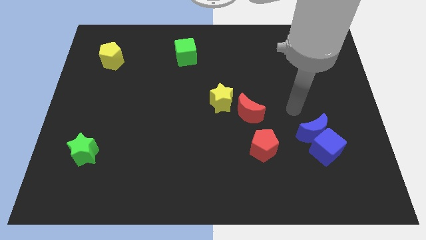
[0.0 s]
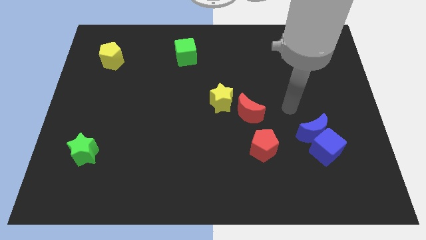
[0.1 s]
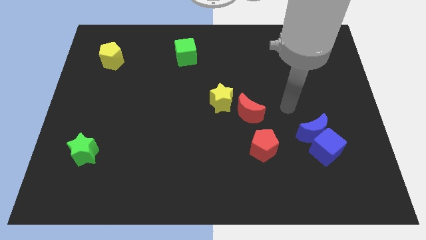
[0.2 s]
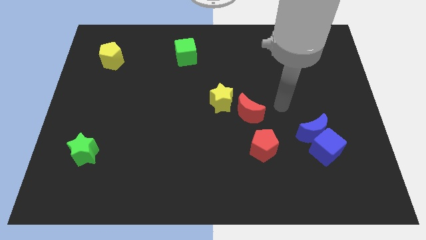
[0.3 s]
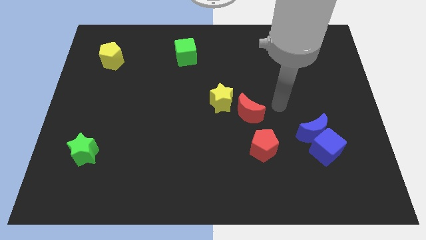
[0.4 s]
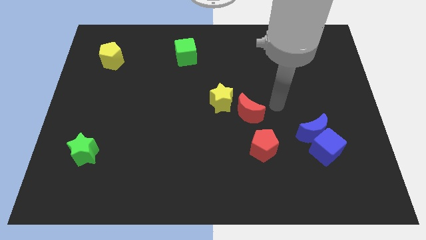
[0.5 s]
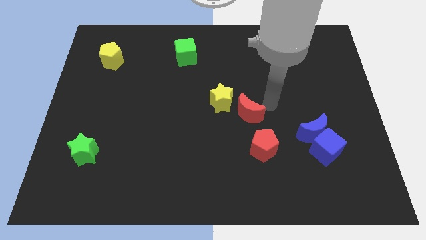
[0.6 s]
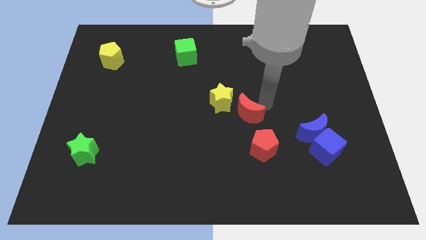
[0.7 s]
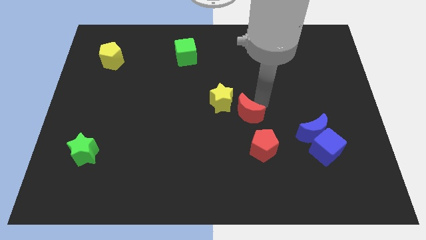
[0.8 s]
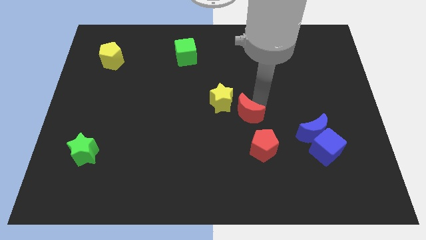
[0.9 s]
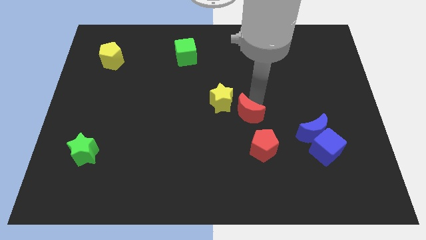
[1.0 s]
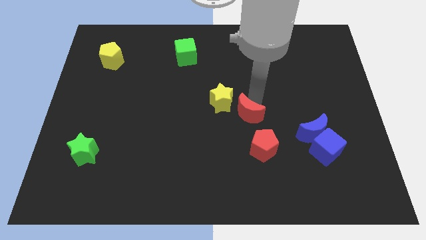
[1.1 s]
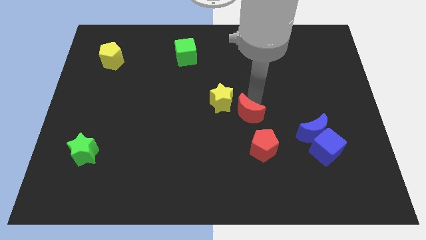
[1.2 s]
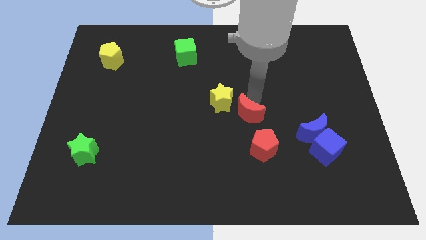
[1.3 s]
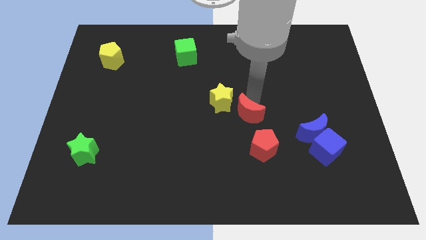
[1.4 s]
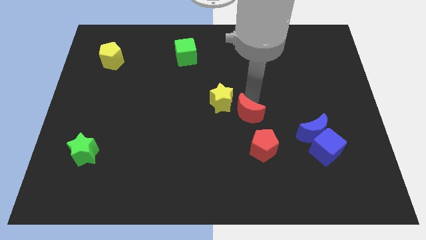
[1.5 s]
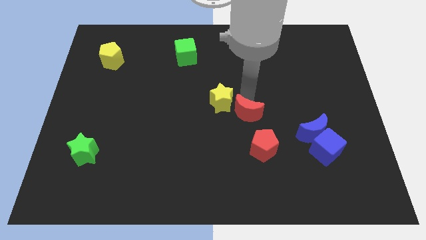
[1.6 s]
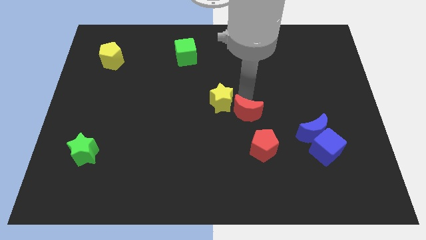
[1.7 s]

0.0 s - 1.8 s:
place your arm above red crescent

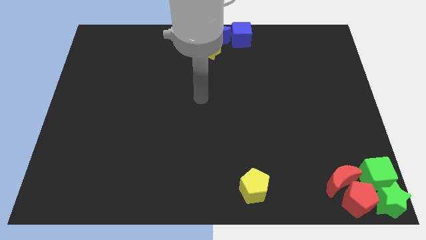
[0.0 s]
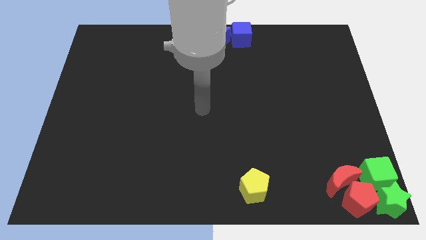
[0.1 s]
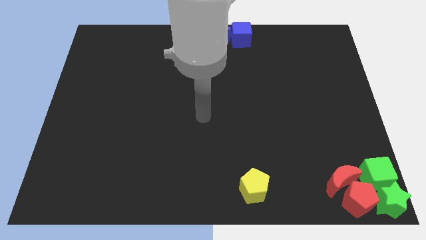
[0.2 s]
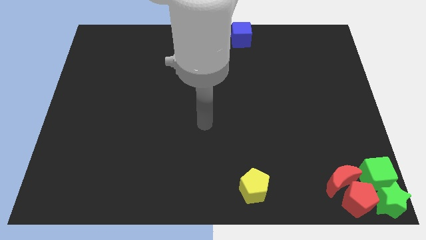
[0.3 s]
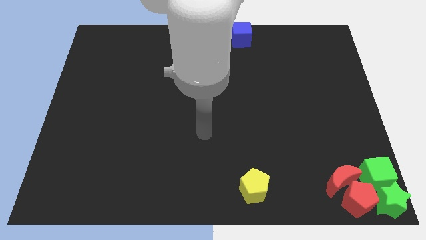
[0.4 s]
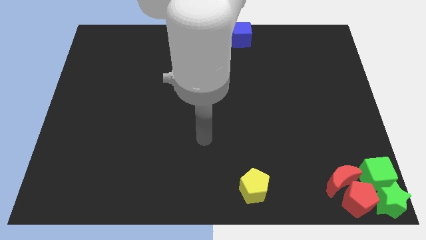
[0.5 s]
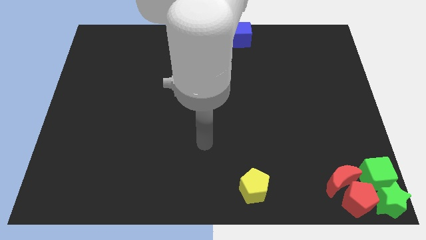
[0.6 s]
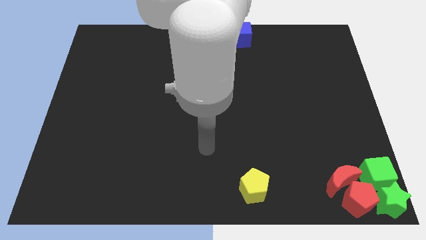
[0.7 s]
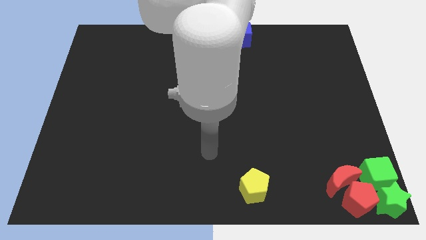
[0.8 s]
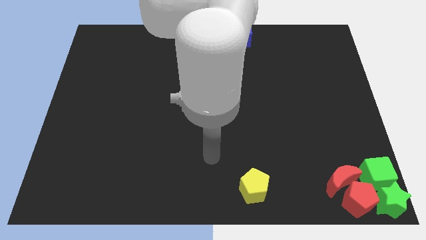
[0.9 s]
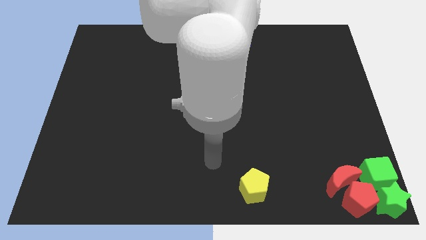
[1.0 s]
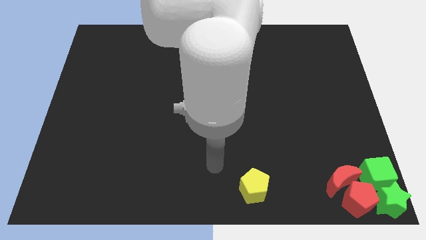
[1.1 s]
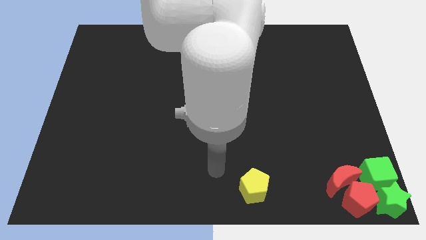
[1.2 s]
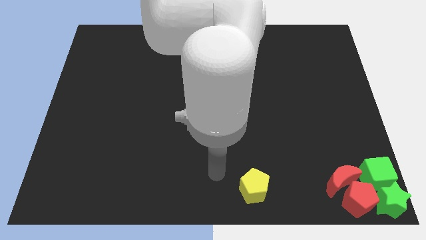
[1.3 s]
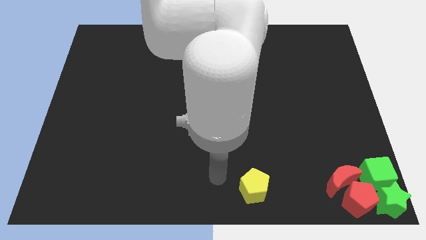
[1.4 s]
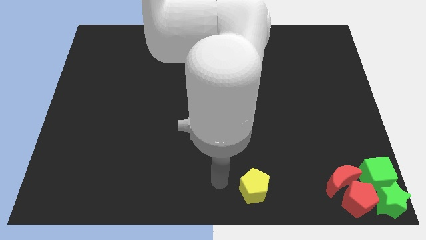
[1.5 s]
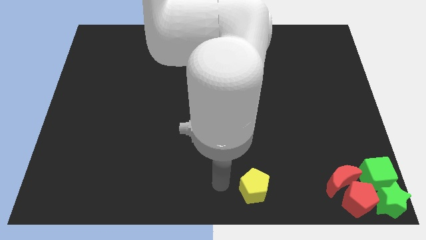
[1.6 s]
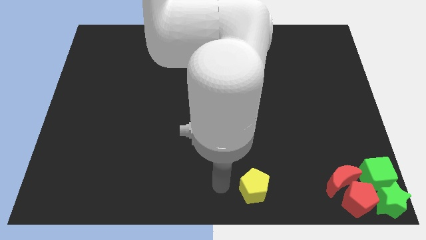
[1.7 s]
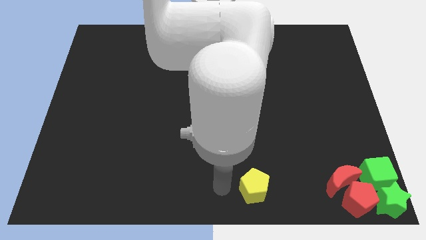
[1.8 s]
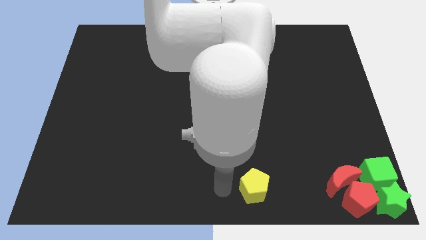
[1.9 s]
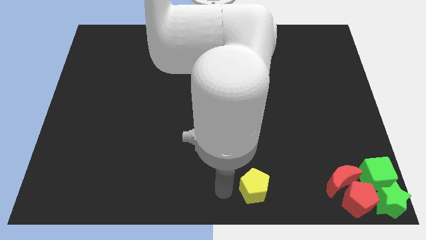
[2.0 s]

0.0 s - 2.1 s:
move your arm left to the yellow pentagon

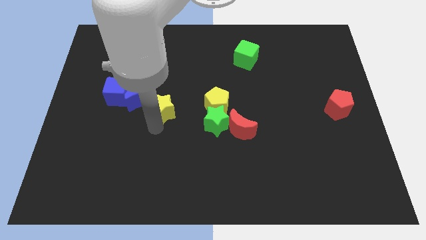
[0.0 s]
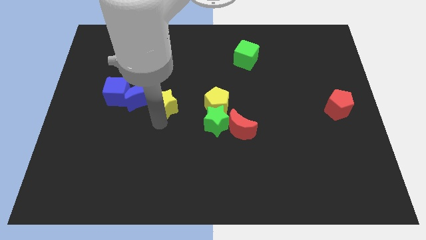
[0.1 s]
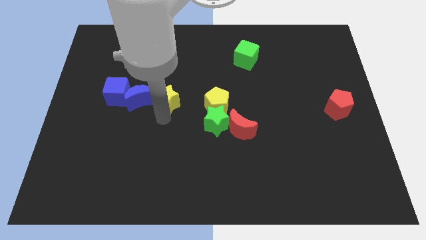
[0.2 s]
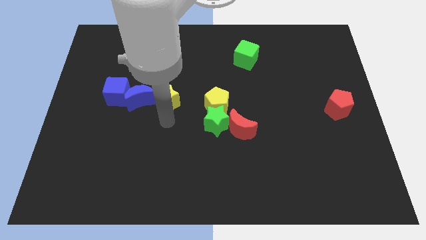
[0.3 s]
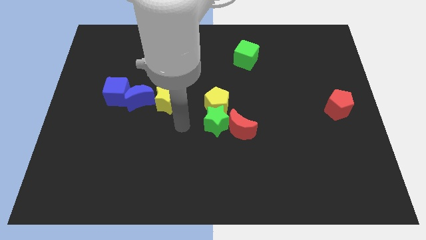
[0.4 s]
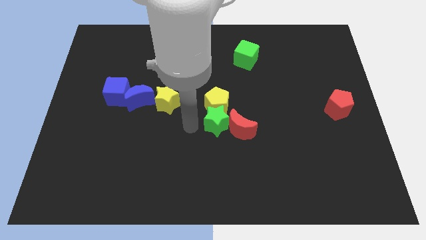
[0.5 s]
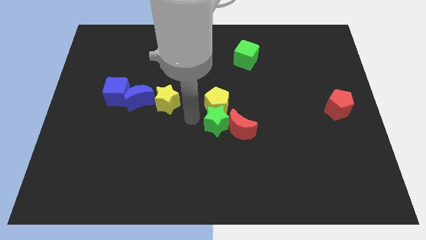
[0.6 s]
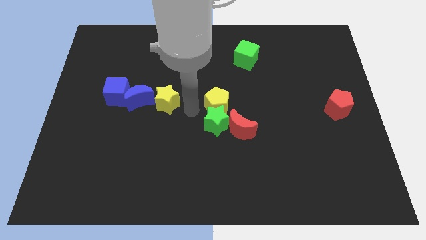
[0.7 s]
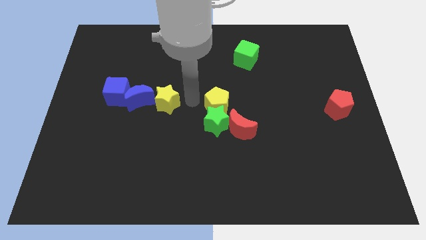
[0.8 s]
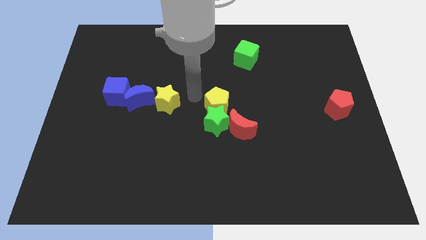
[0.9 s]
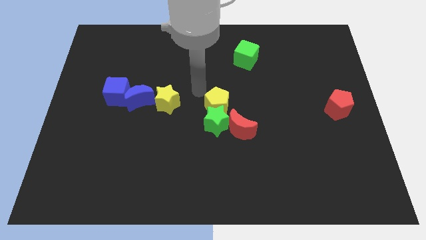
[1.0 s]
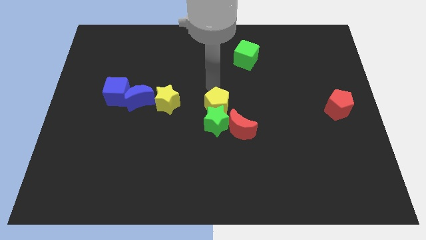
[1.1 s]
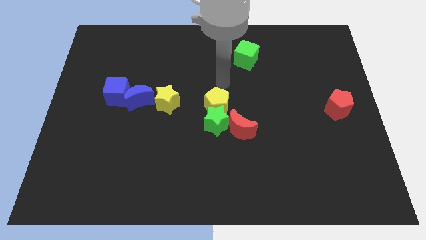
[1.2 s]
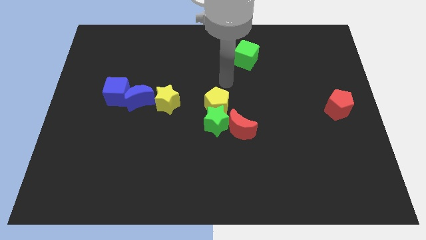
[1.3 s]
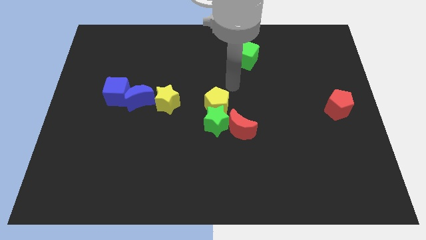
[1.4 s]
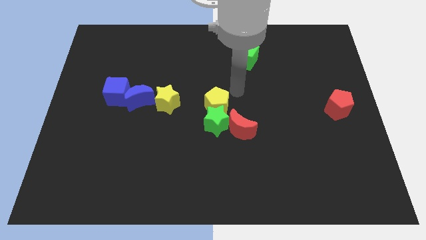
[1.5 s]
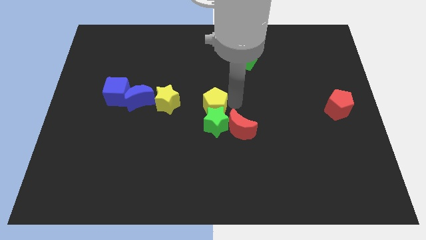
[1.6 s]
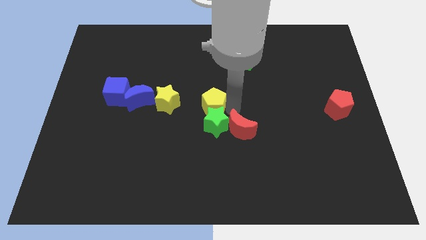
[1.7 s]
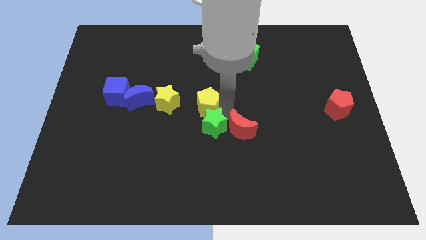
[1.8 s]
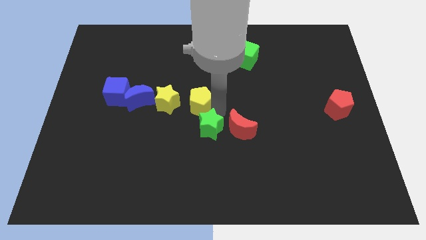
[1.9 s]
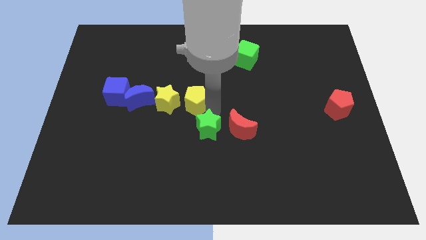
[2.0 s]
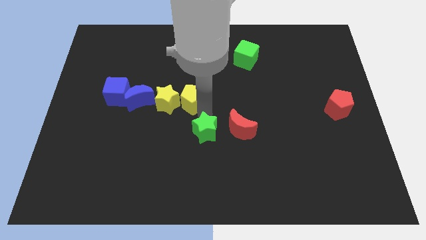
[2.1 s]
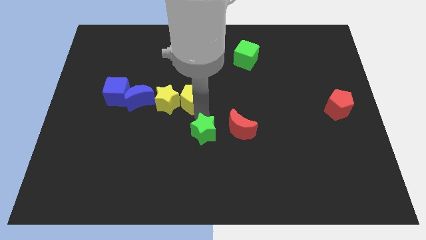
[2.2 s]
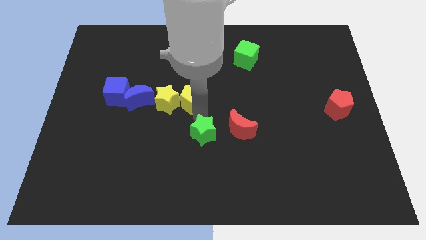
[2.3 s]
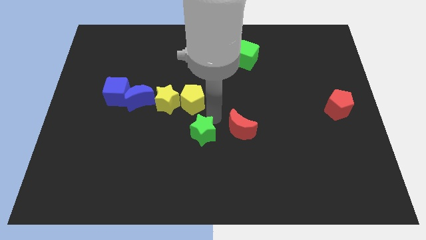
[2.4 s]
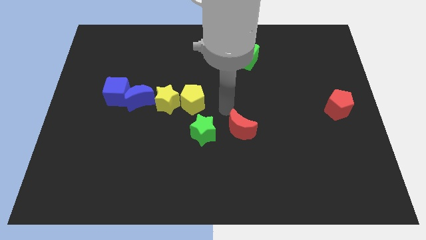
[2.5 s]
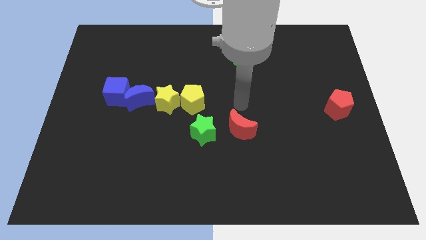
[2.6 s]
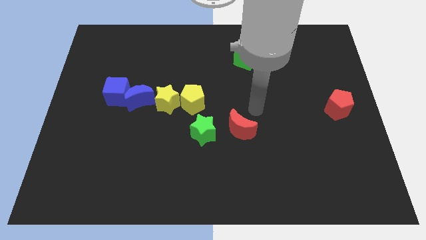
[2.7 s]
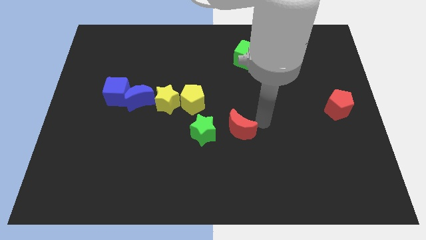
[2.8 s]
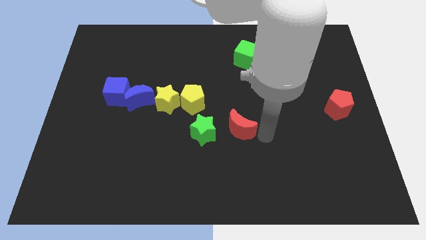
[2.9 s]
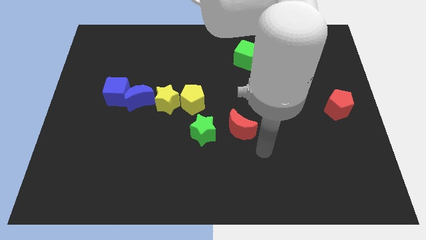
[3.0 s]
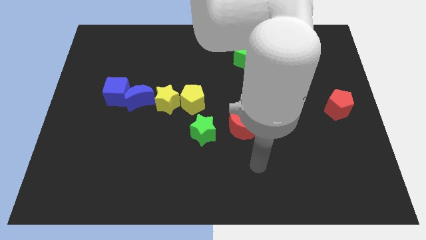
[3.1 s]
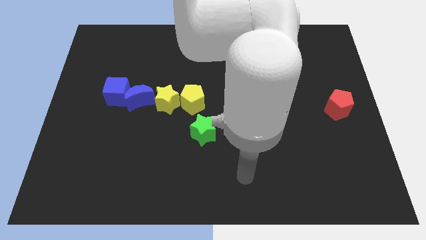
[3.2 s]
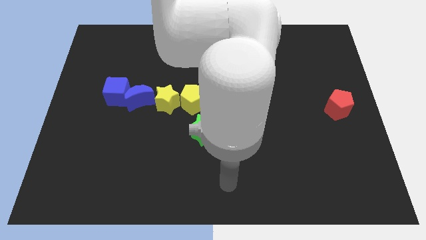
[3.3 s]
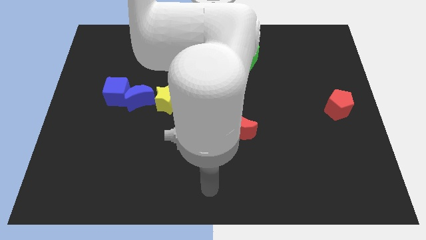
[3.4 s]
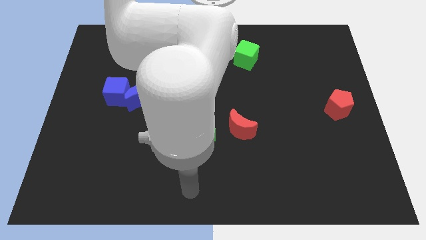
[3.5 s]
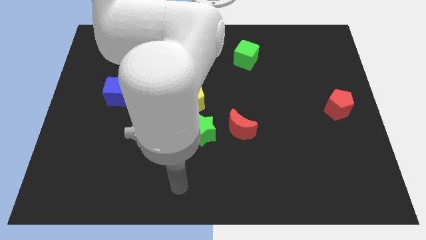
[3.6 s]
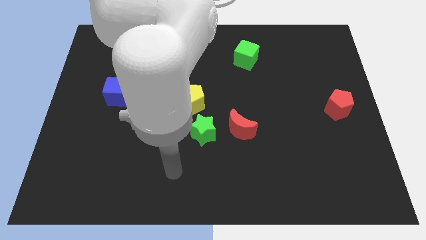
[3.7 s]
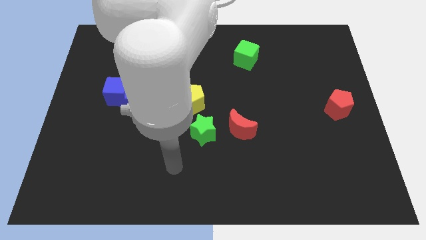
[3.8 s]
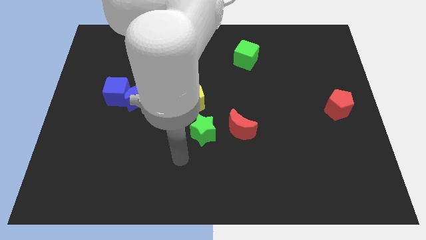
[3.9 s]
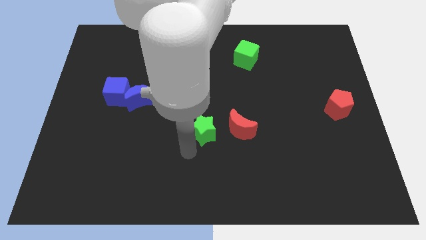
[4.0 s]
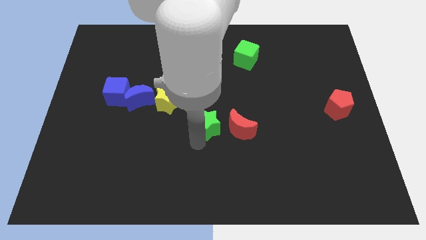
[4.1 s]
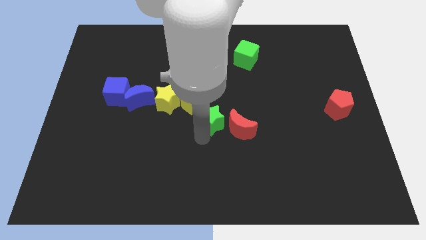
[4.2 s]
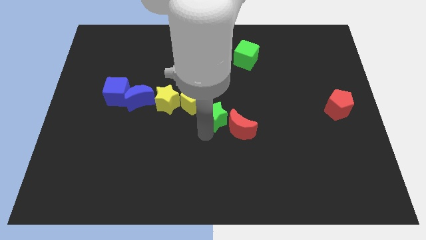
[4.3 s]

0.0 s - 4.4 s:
place the green star diagonally of the green cube

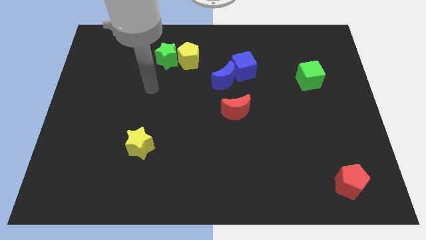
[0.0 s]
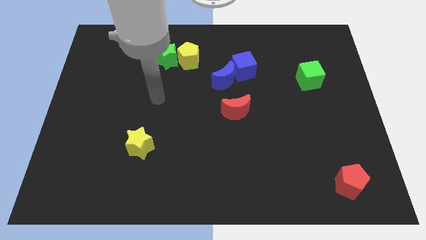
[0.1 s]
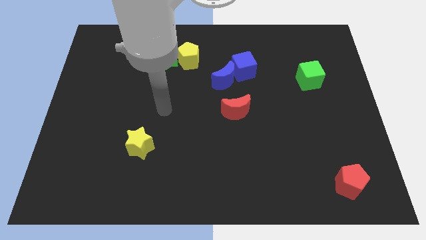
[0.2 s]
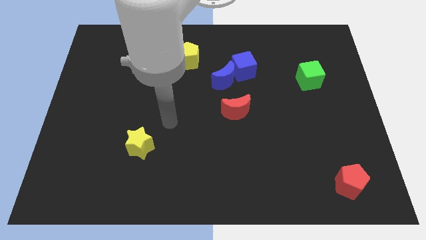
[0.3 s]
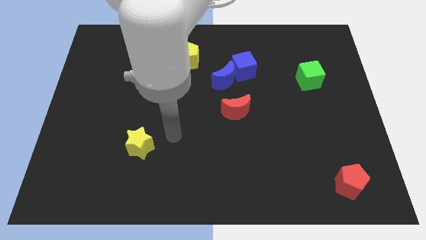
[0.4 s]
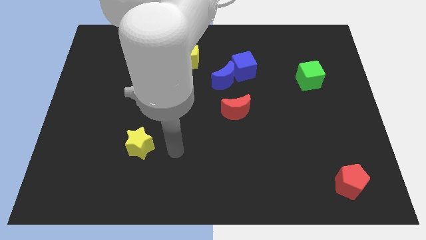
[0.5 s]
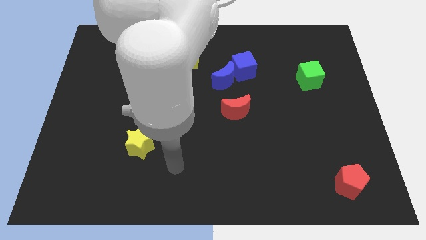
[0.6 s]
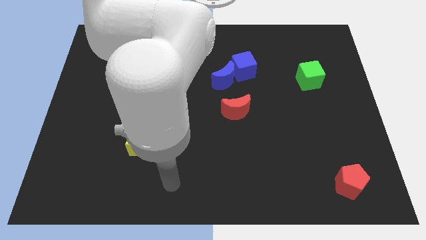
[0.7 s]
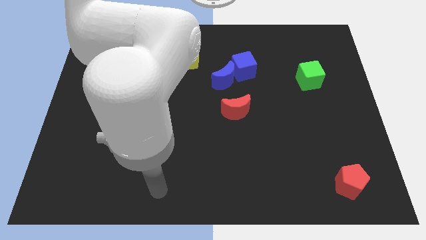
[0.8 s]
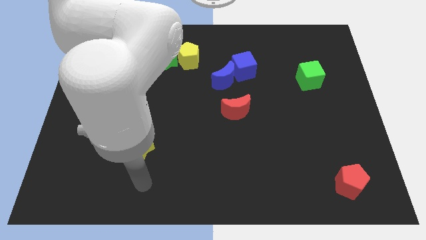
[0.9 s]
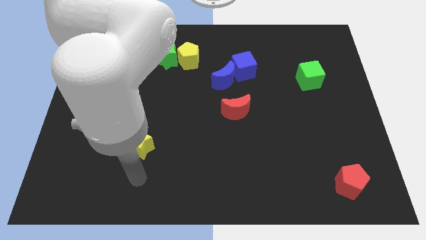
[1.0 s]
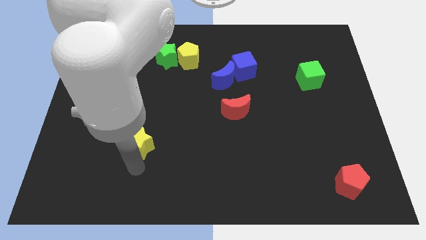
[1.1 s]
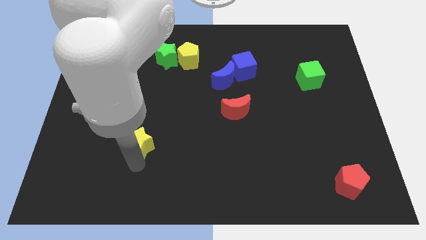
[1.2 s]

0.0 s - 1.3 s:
touch the bottom side of the yellow star
